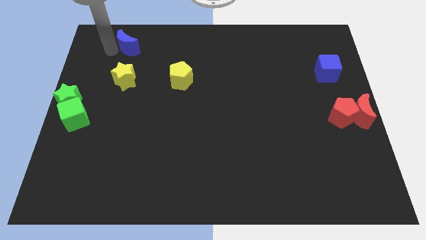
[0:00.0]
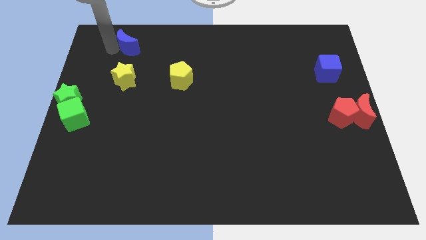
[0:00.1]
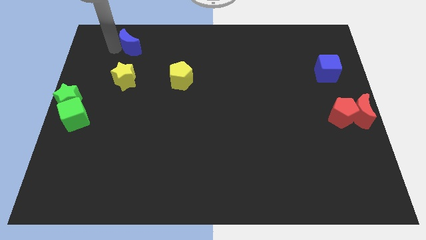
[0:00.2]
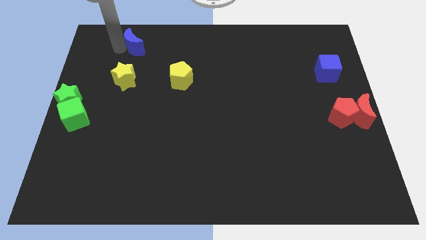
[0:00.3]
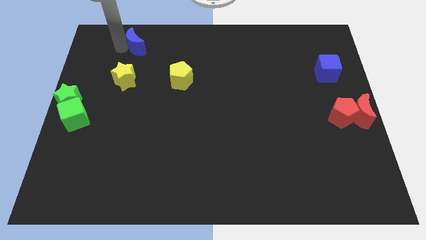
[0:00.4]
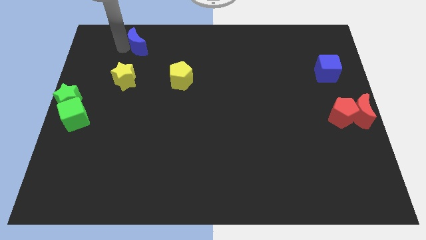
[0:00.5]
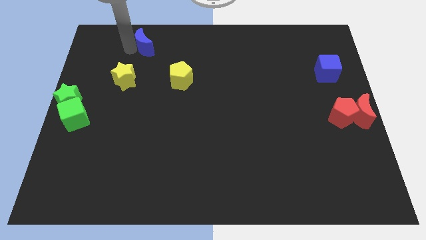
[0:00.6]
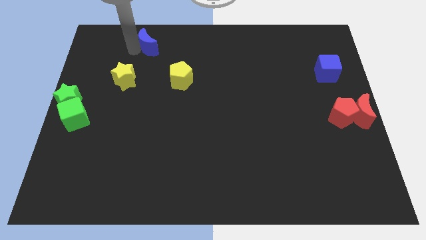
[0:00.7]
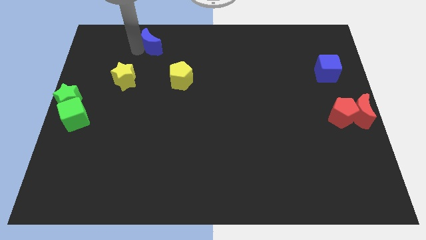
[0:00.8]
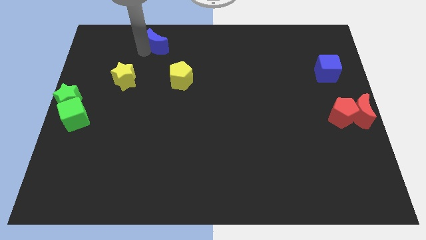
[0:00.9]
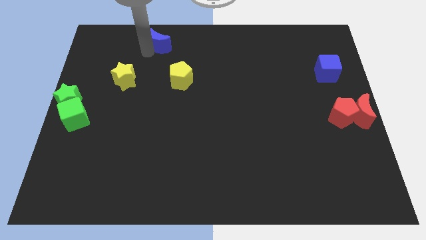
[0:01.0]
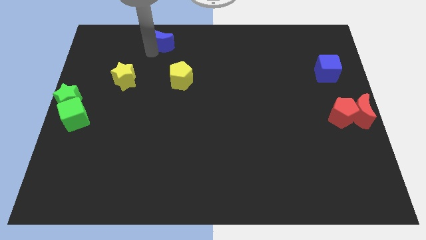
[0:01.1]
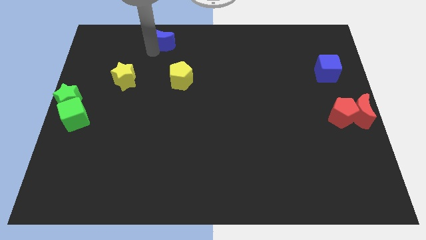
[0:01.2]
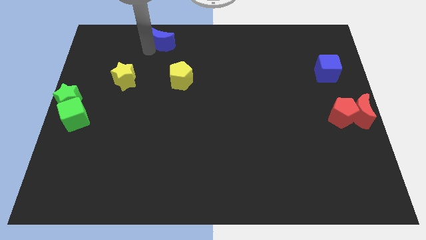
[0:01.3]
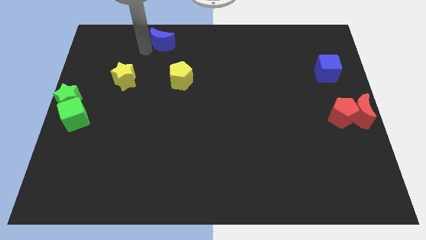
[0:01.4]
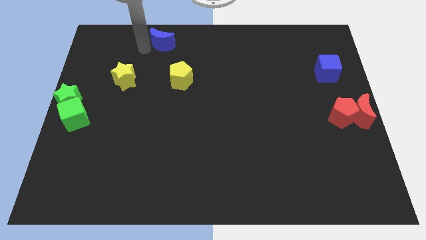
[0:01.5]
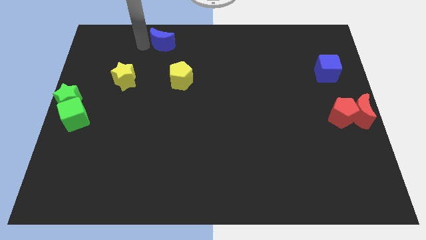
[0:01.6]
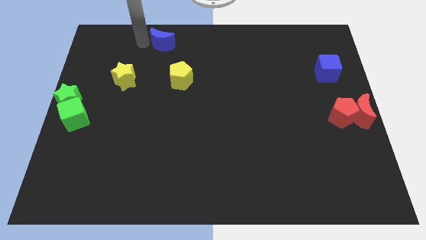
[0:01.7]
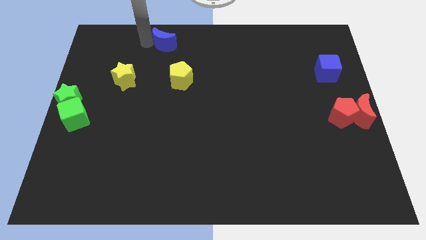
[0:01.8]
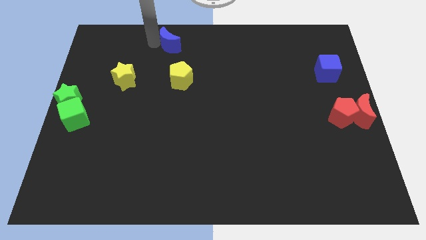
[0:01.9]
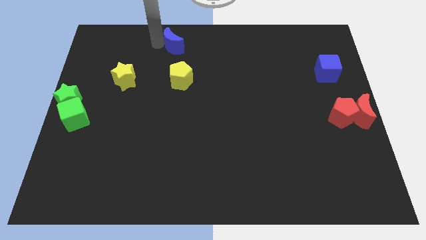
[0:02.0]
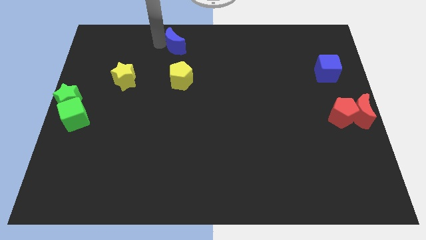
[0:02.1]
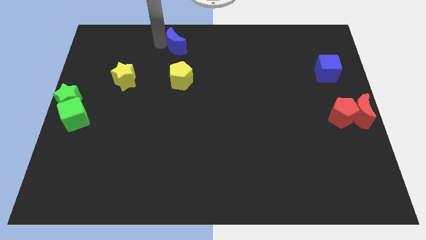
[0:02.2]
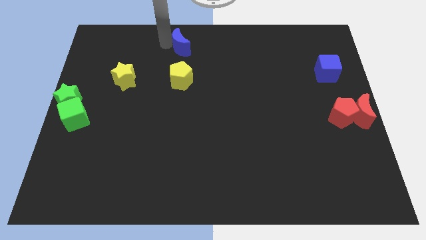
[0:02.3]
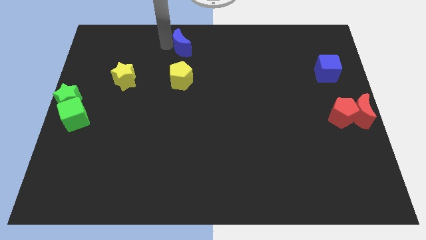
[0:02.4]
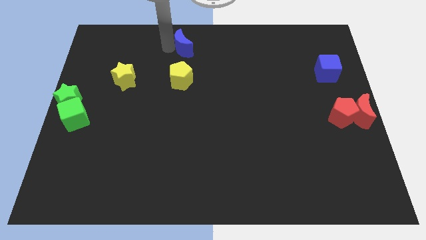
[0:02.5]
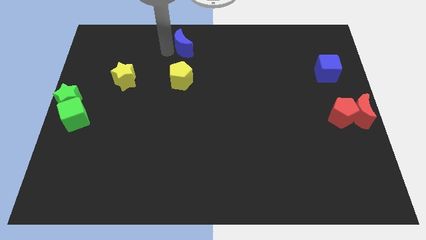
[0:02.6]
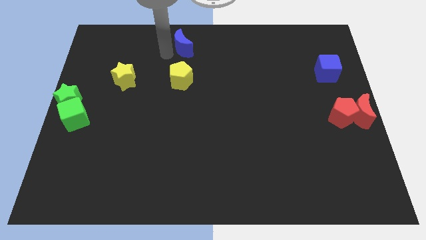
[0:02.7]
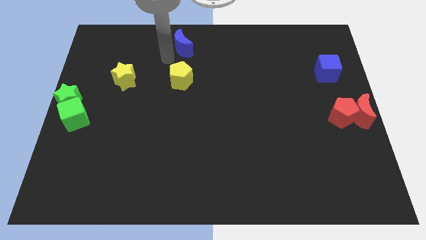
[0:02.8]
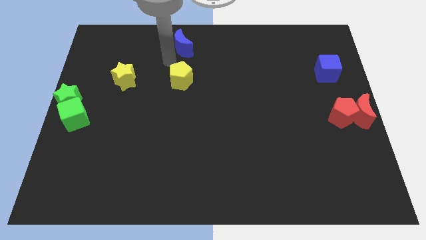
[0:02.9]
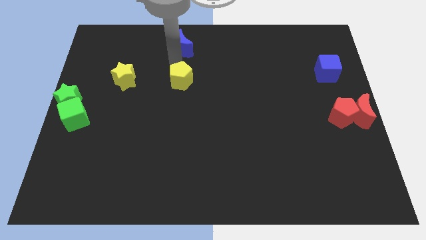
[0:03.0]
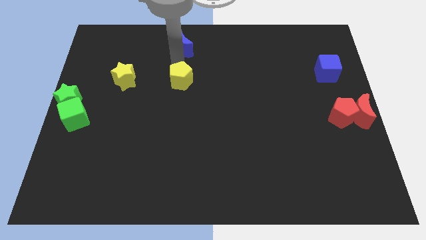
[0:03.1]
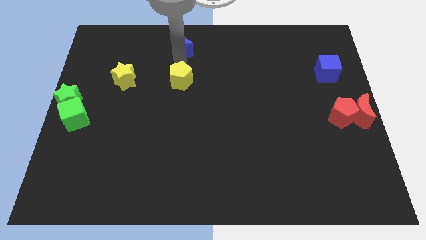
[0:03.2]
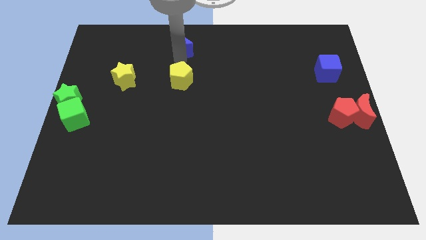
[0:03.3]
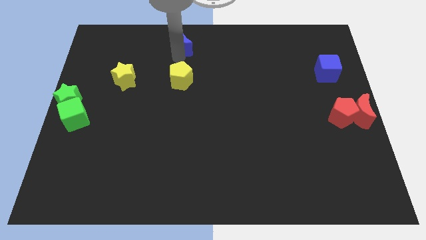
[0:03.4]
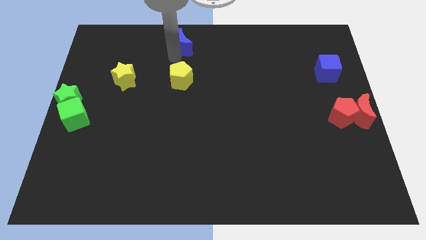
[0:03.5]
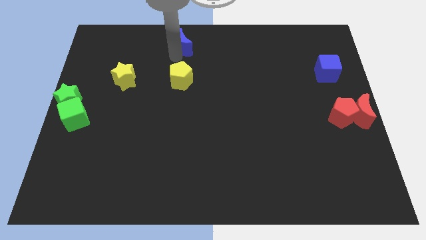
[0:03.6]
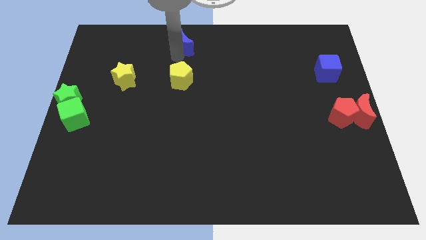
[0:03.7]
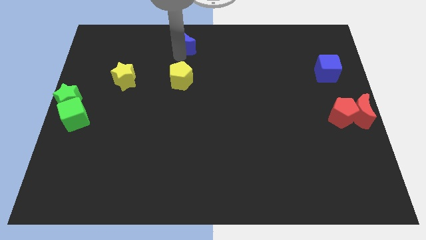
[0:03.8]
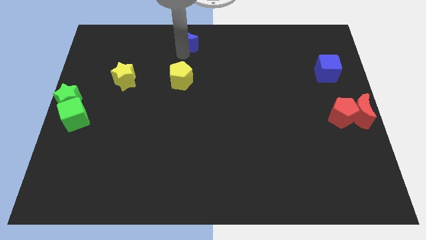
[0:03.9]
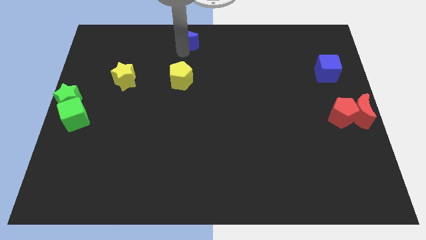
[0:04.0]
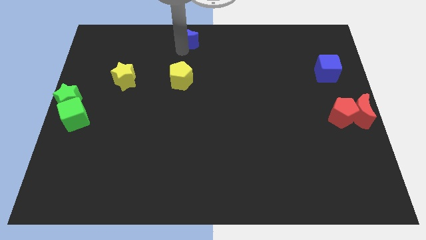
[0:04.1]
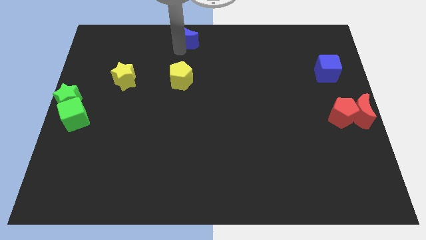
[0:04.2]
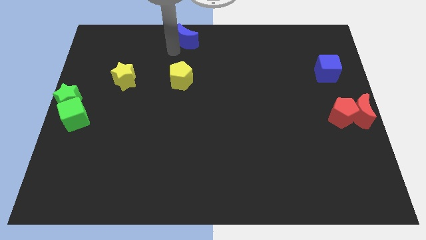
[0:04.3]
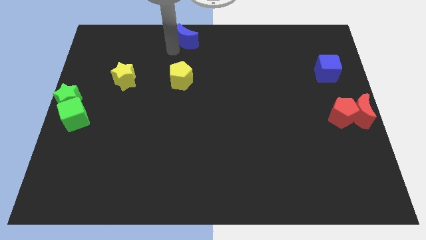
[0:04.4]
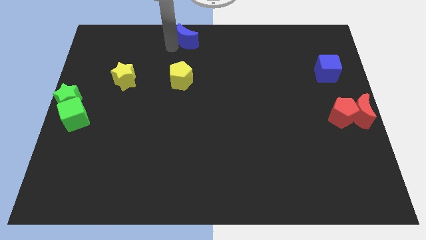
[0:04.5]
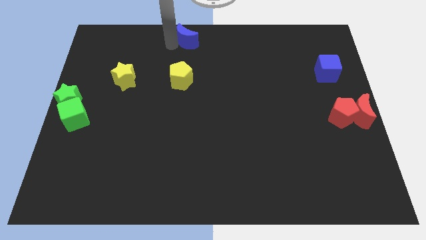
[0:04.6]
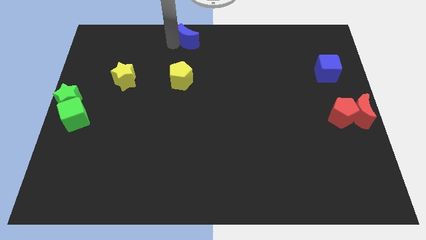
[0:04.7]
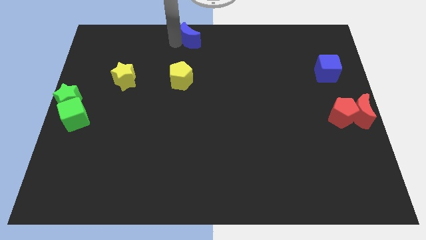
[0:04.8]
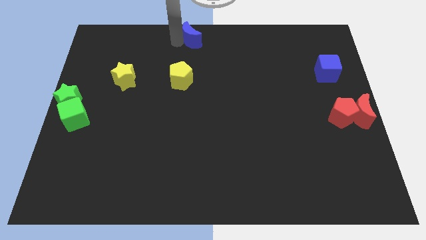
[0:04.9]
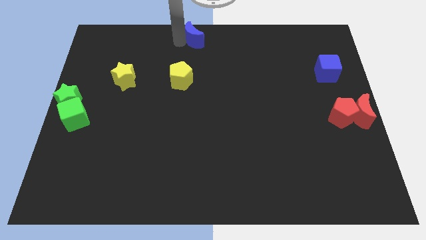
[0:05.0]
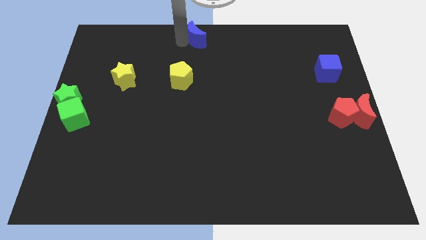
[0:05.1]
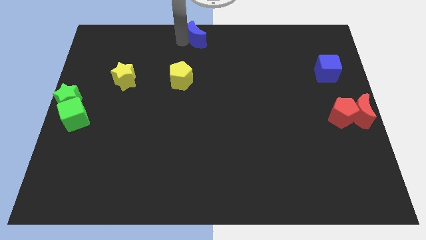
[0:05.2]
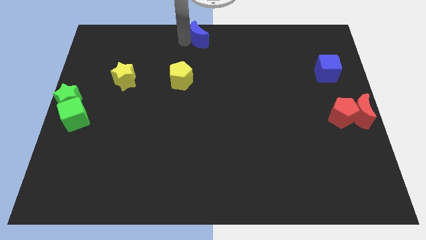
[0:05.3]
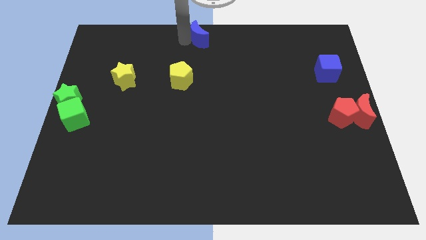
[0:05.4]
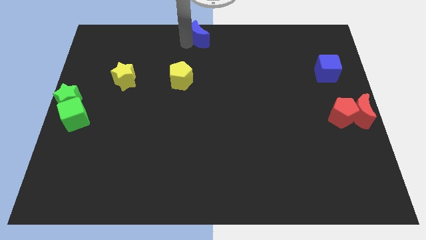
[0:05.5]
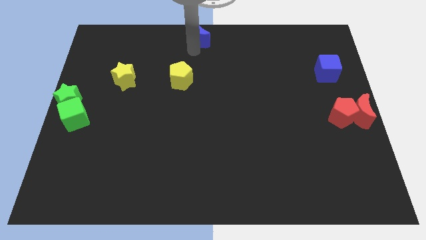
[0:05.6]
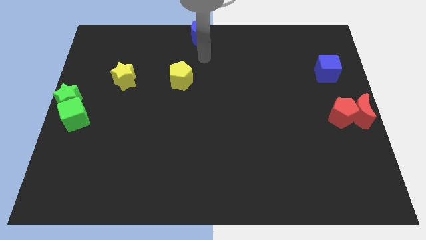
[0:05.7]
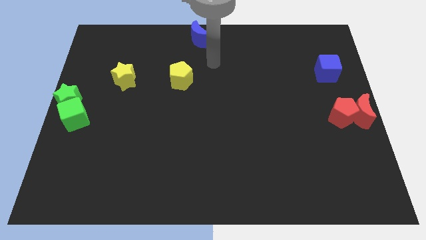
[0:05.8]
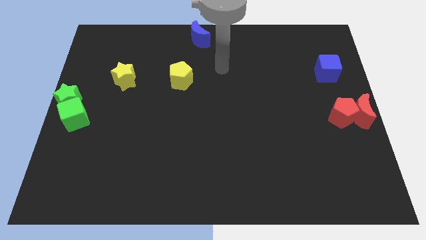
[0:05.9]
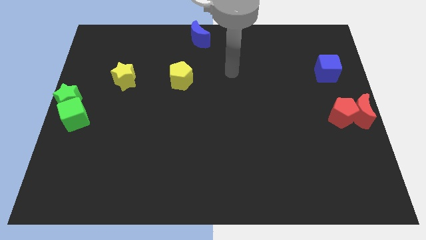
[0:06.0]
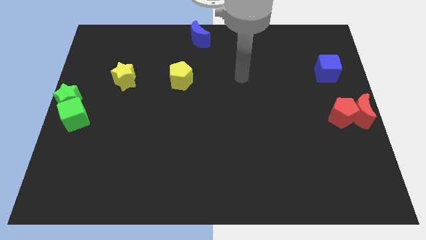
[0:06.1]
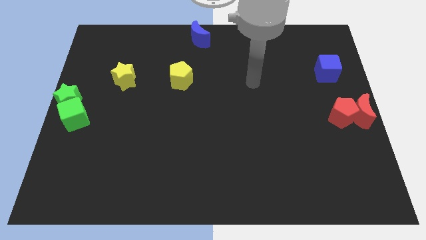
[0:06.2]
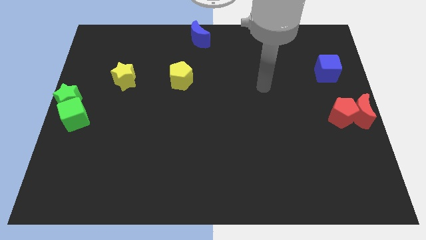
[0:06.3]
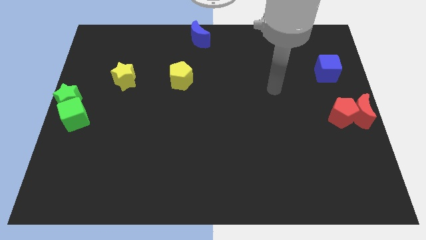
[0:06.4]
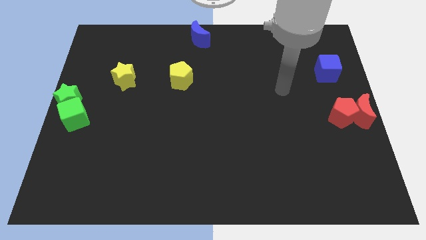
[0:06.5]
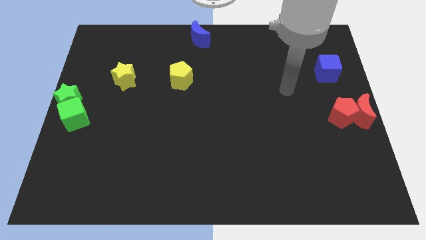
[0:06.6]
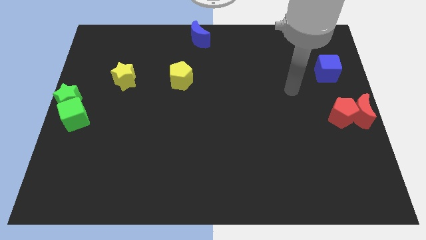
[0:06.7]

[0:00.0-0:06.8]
push the blue moon to the top center of the board

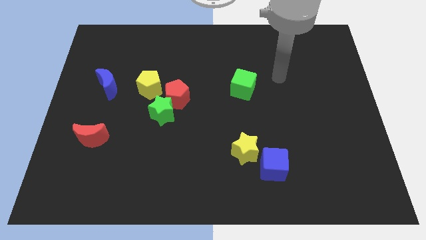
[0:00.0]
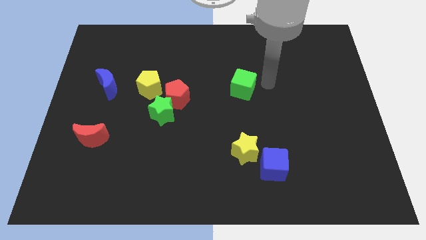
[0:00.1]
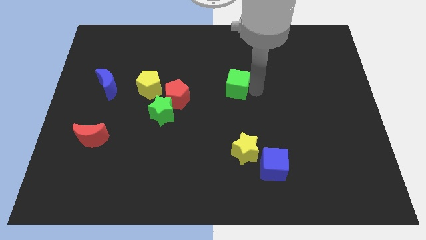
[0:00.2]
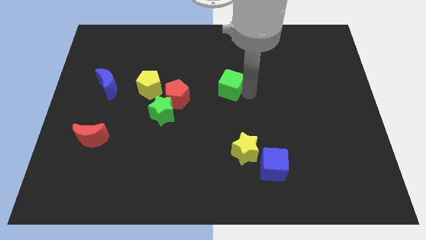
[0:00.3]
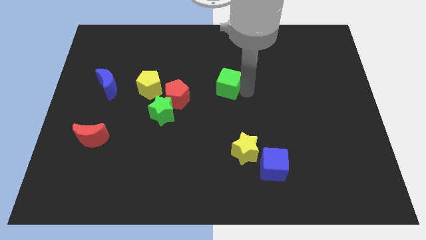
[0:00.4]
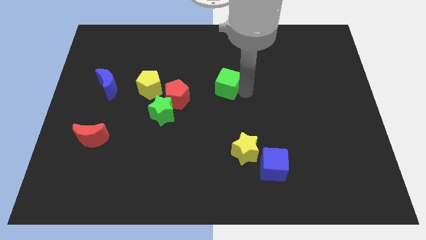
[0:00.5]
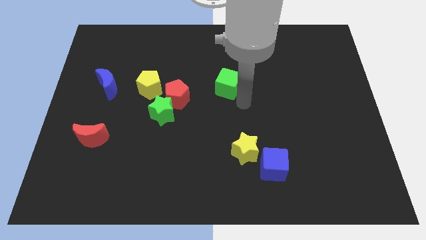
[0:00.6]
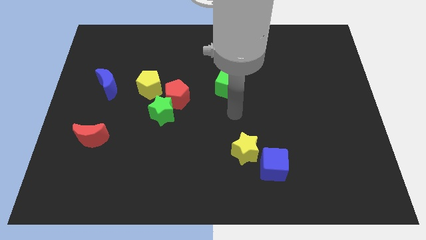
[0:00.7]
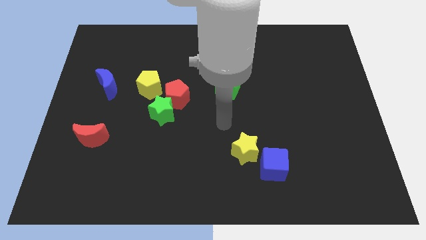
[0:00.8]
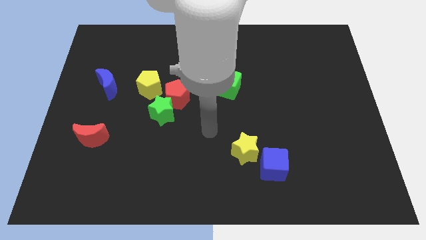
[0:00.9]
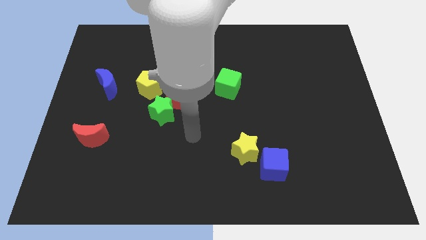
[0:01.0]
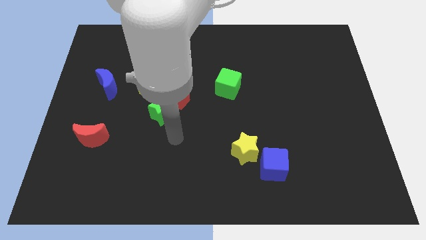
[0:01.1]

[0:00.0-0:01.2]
push the green cube at the center of the board

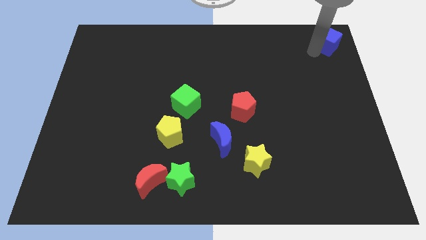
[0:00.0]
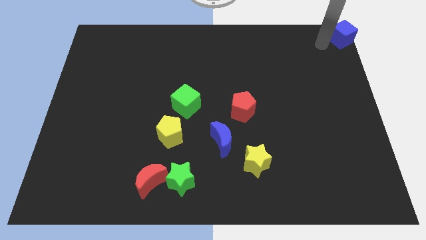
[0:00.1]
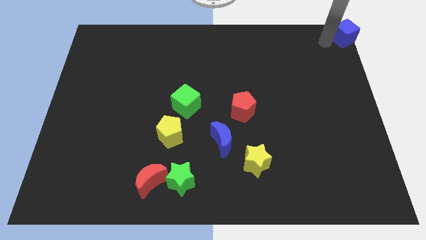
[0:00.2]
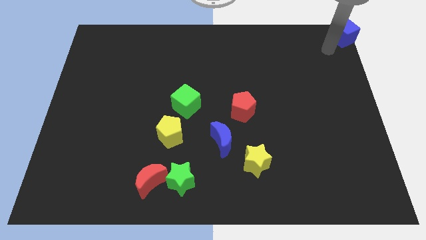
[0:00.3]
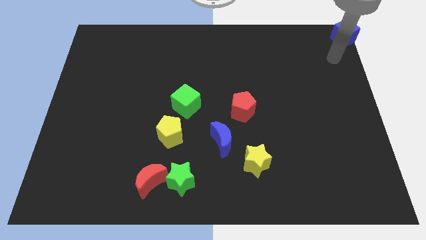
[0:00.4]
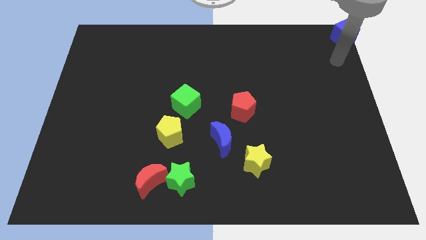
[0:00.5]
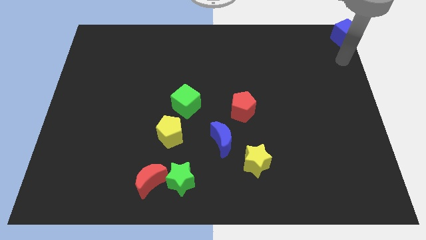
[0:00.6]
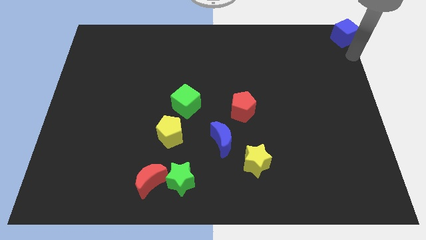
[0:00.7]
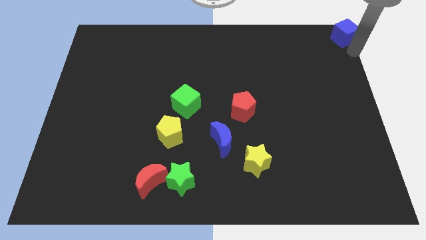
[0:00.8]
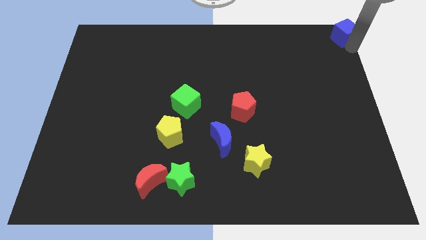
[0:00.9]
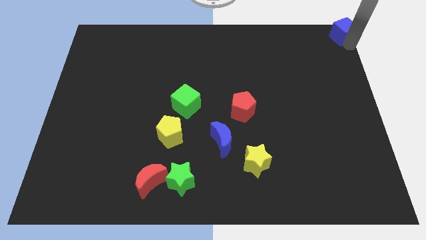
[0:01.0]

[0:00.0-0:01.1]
push the blue cube diagonally to red pentagon
